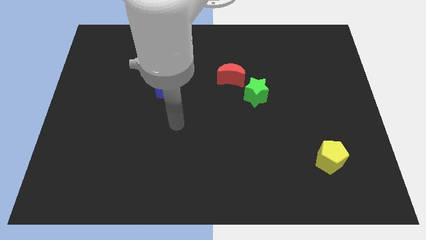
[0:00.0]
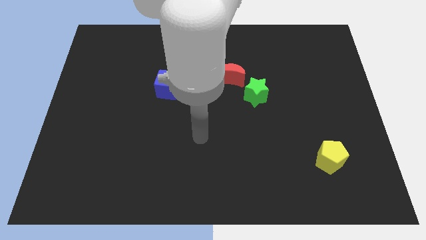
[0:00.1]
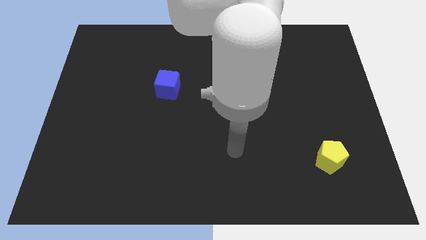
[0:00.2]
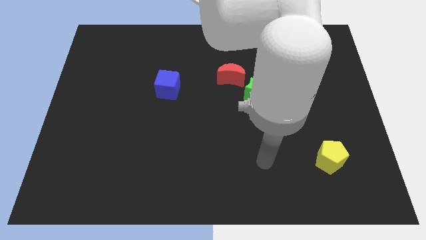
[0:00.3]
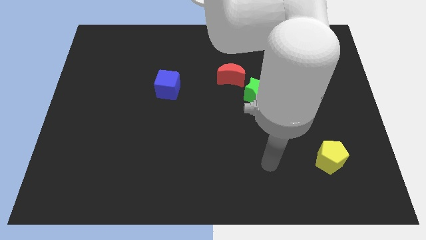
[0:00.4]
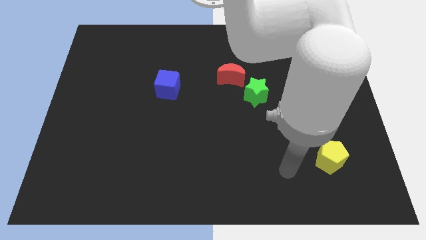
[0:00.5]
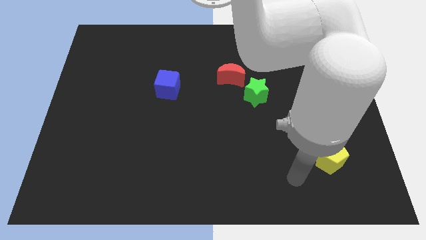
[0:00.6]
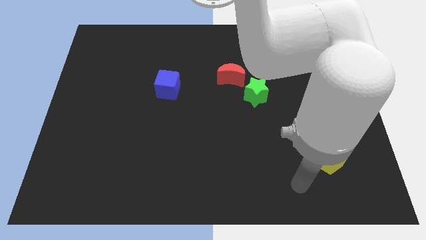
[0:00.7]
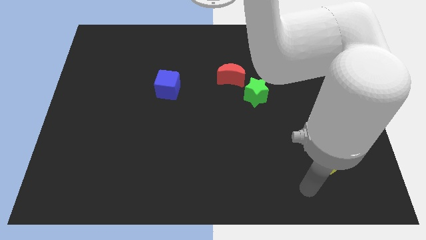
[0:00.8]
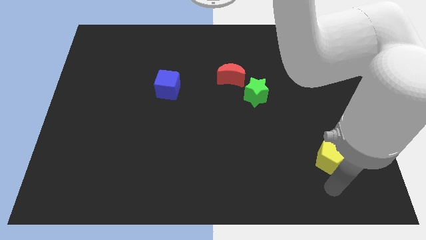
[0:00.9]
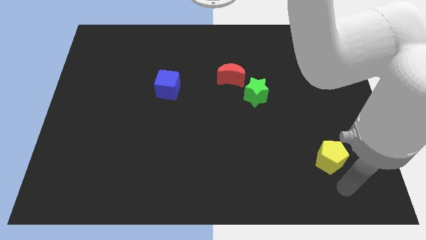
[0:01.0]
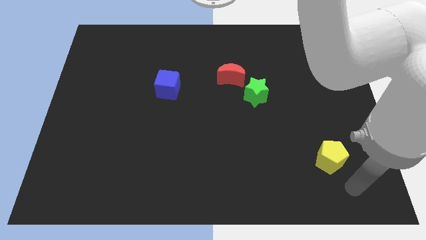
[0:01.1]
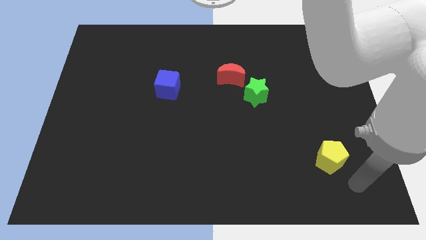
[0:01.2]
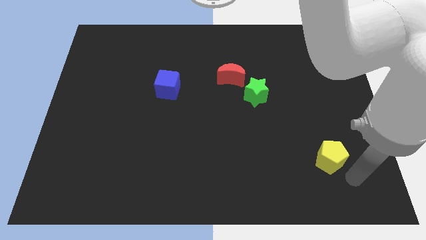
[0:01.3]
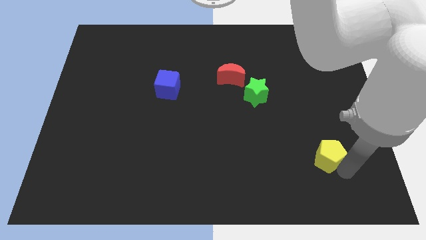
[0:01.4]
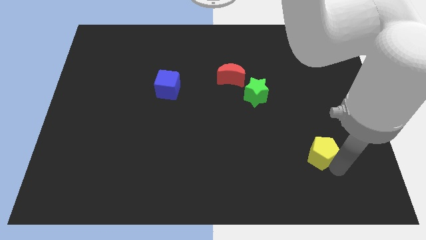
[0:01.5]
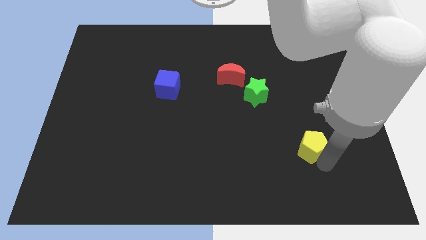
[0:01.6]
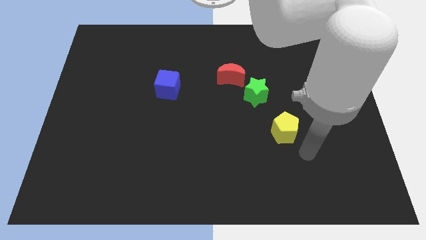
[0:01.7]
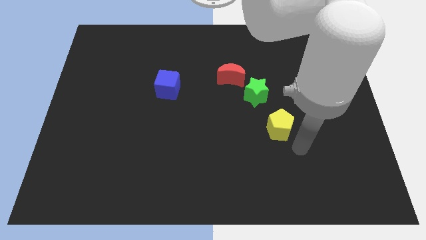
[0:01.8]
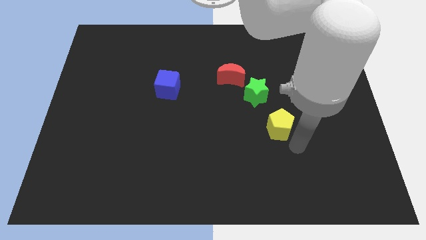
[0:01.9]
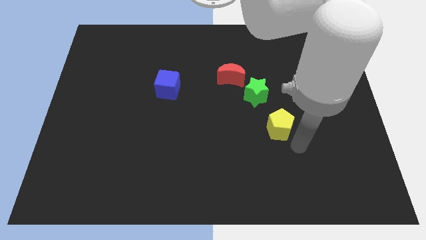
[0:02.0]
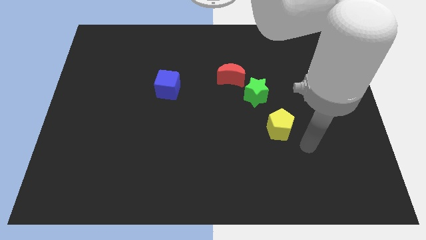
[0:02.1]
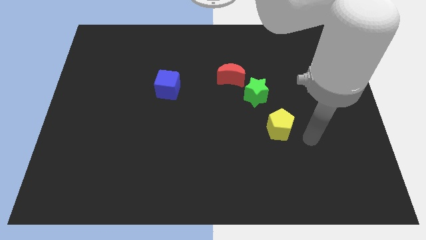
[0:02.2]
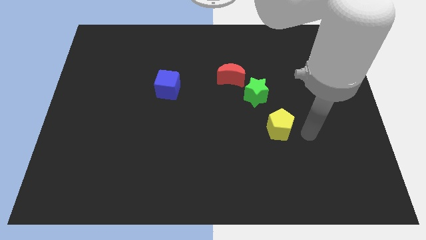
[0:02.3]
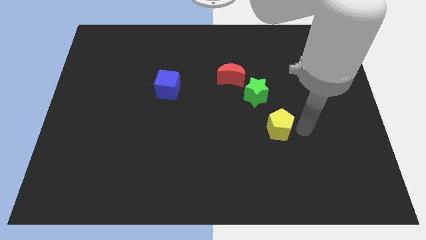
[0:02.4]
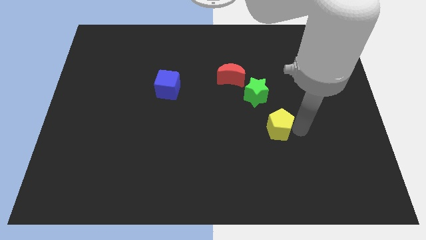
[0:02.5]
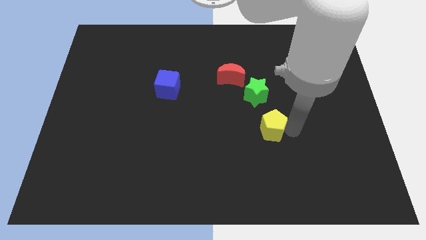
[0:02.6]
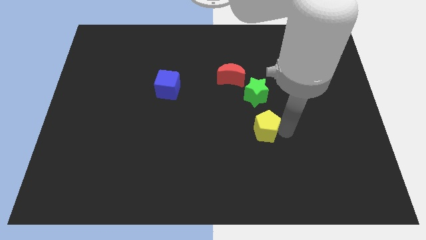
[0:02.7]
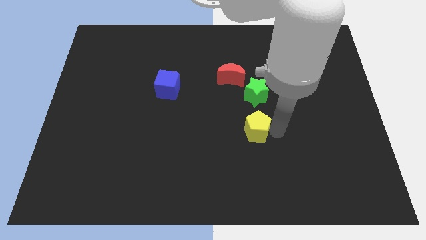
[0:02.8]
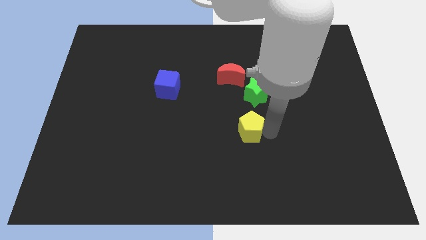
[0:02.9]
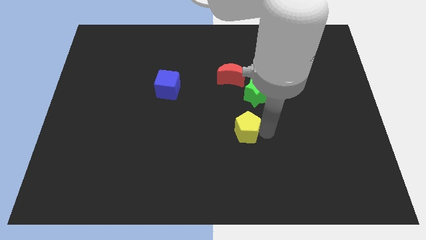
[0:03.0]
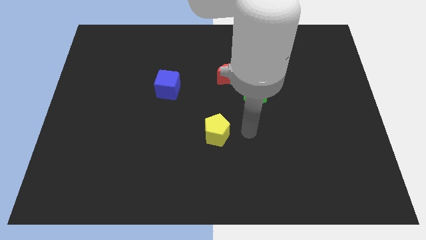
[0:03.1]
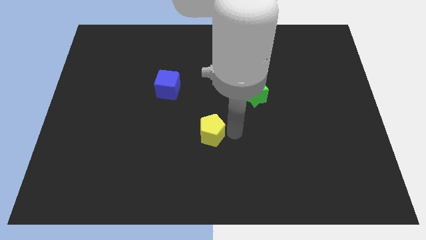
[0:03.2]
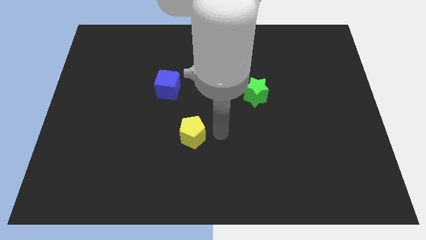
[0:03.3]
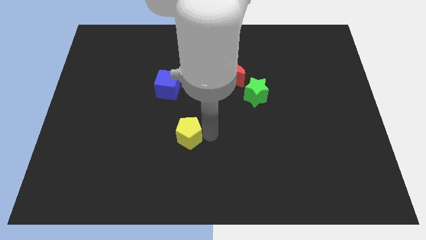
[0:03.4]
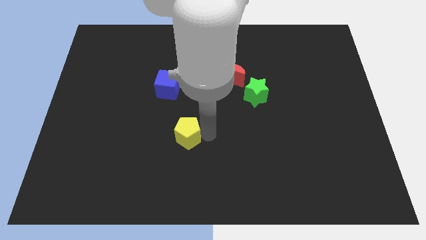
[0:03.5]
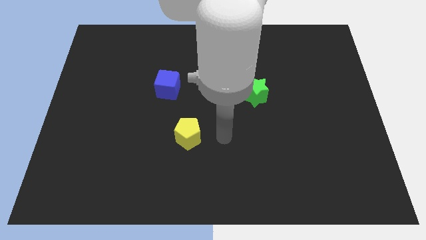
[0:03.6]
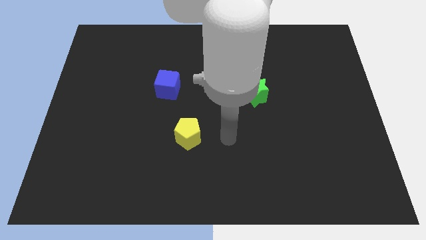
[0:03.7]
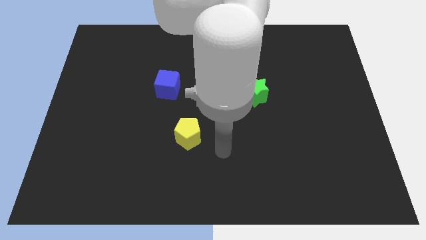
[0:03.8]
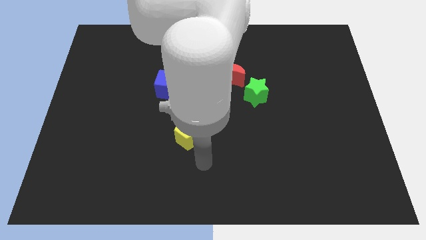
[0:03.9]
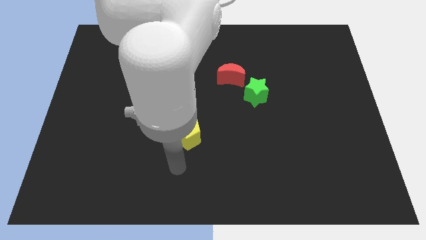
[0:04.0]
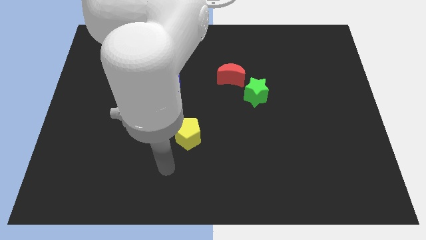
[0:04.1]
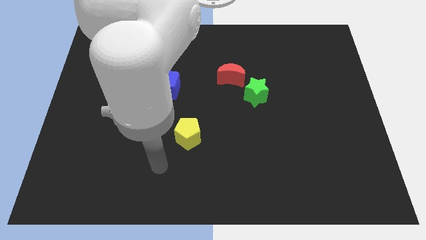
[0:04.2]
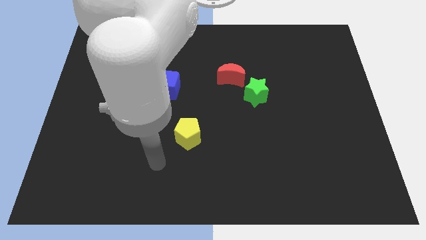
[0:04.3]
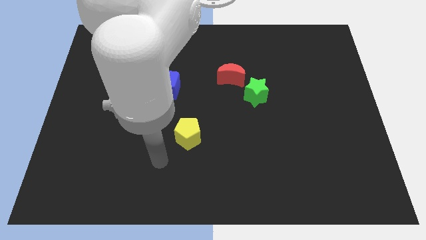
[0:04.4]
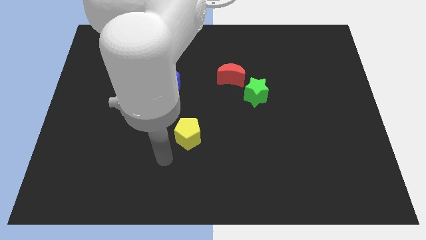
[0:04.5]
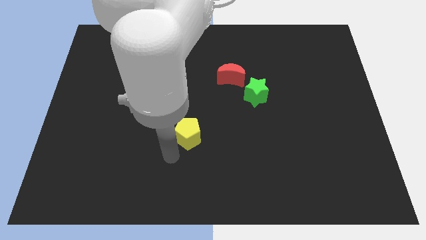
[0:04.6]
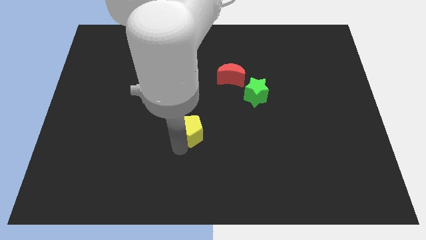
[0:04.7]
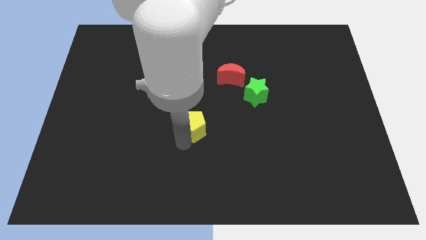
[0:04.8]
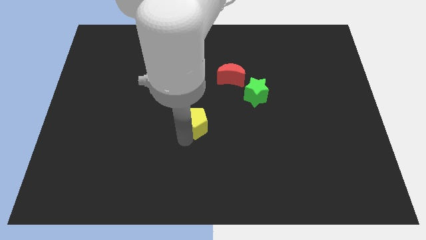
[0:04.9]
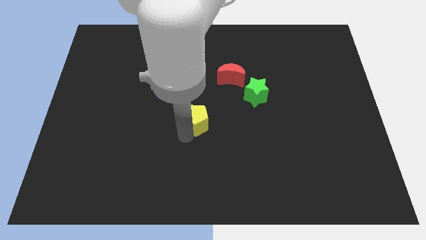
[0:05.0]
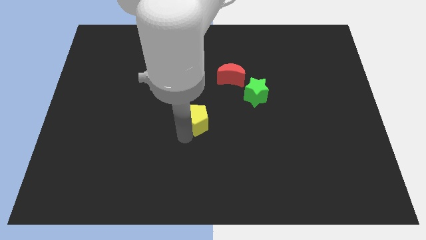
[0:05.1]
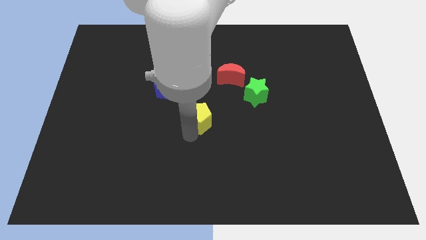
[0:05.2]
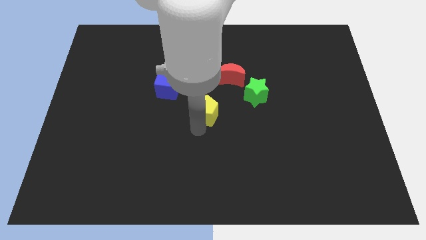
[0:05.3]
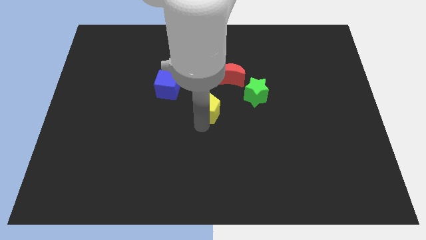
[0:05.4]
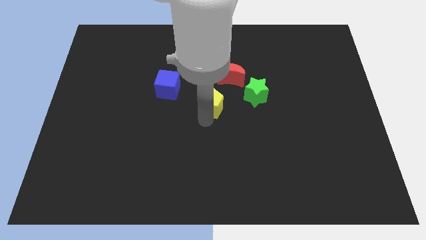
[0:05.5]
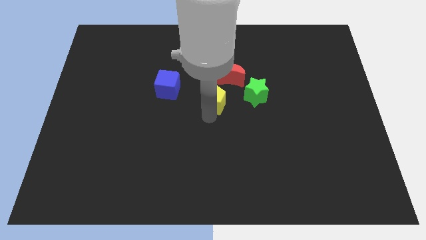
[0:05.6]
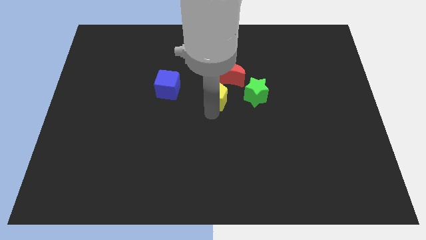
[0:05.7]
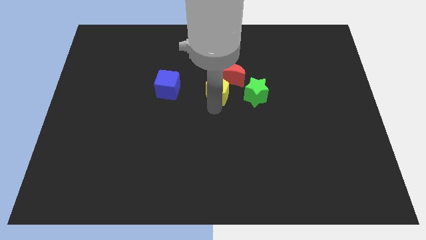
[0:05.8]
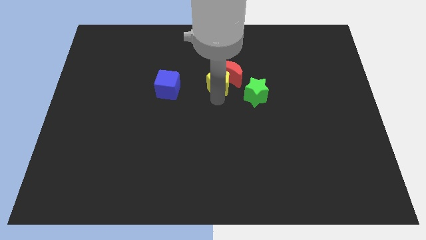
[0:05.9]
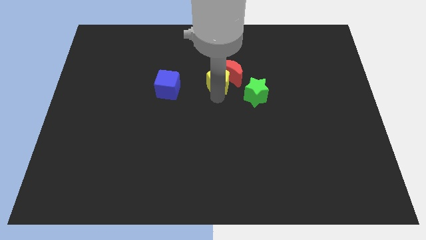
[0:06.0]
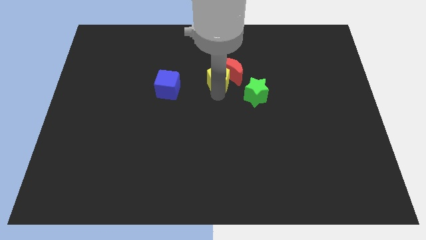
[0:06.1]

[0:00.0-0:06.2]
slide the yellow block towards the moon

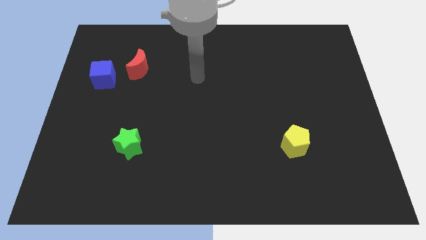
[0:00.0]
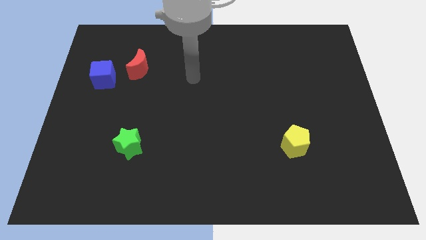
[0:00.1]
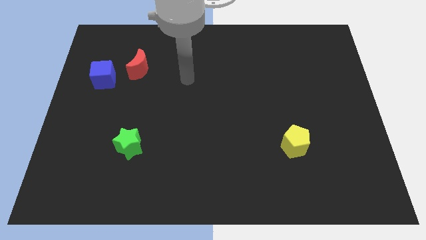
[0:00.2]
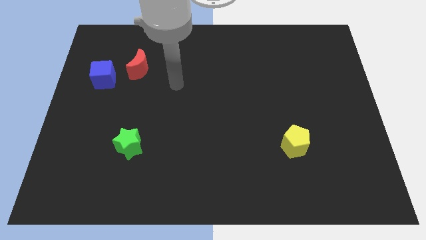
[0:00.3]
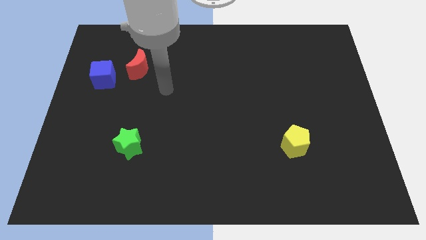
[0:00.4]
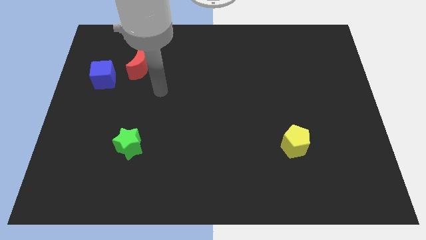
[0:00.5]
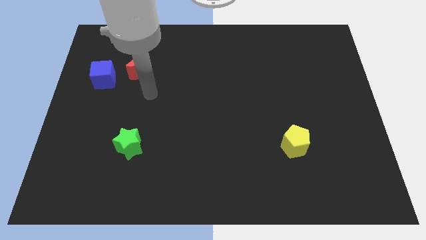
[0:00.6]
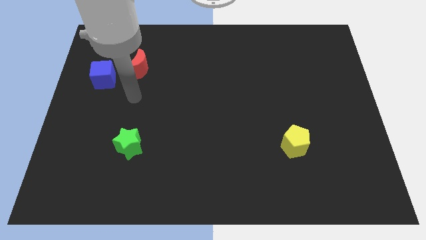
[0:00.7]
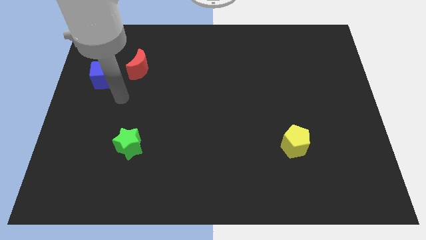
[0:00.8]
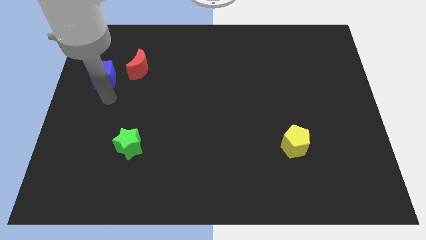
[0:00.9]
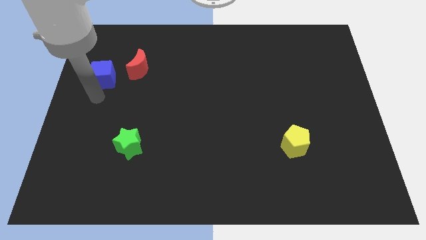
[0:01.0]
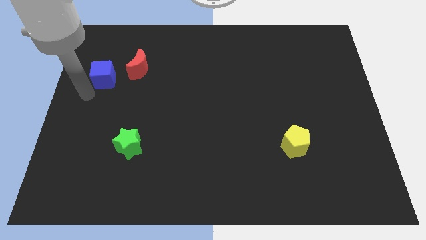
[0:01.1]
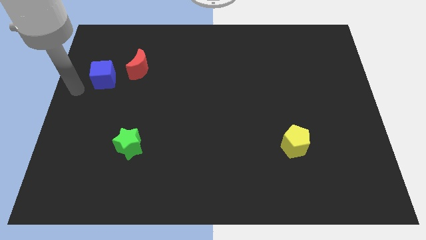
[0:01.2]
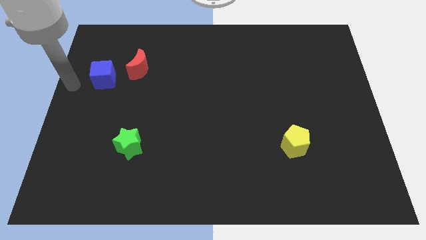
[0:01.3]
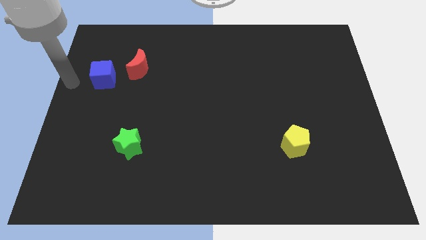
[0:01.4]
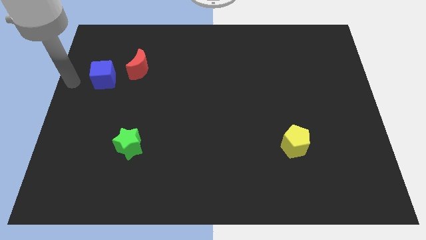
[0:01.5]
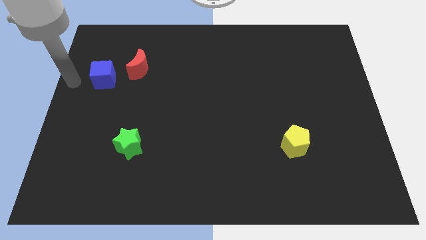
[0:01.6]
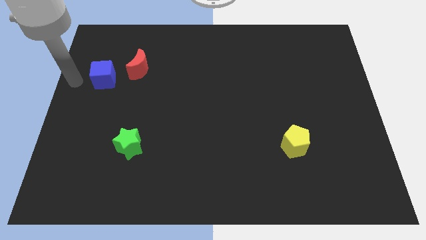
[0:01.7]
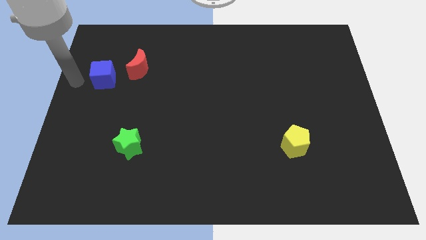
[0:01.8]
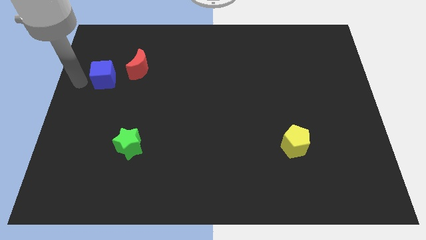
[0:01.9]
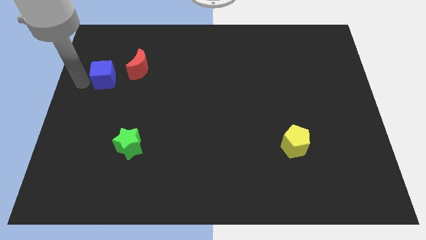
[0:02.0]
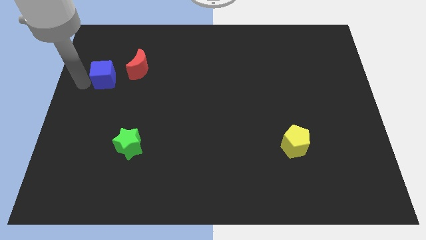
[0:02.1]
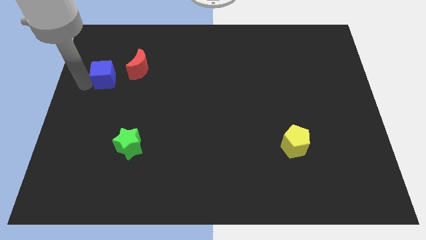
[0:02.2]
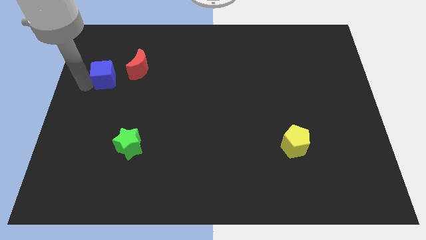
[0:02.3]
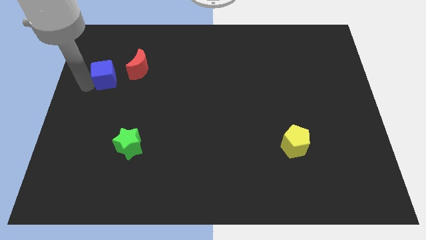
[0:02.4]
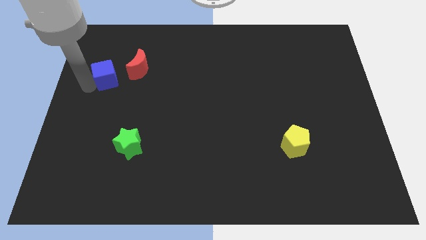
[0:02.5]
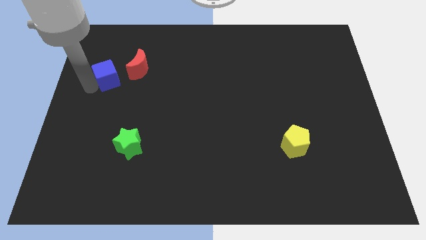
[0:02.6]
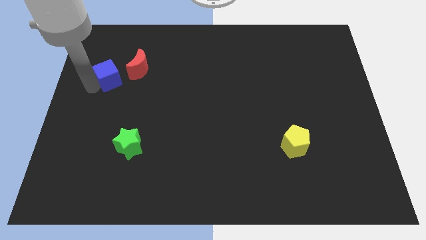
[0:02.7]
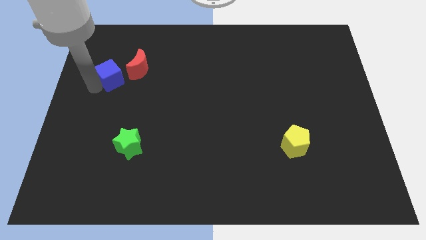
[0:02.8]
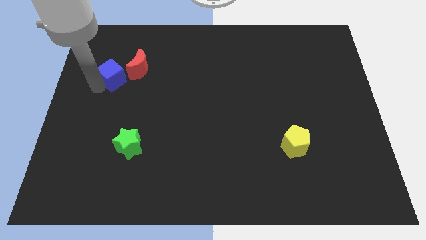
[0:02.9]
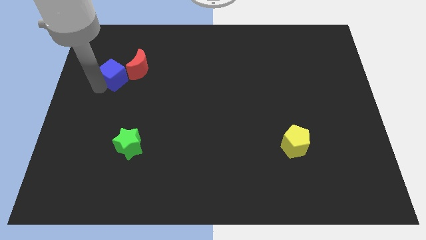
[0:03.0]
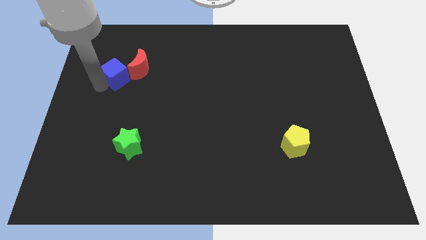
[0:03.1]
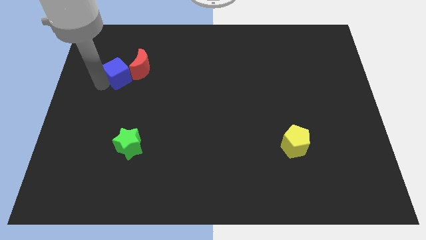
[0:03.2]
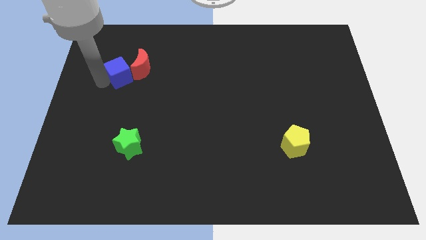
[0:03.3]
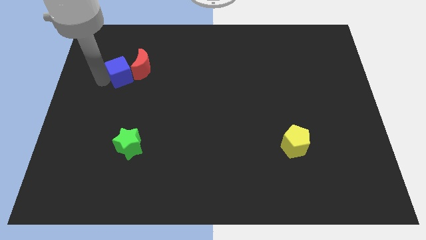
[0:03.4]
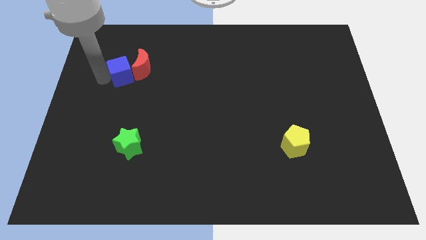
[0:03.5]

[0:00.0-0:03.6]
push the blue cube towards the red block
